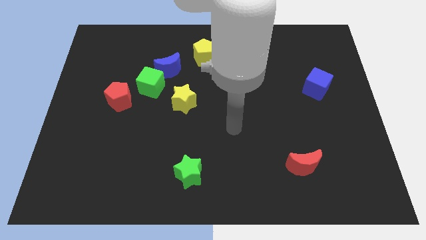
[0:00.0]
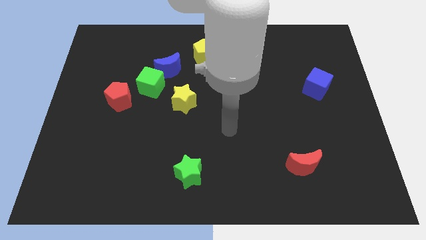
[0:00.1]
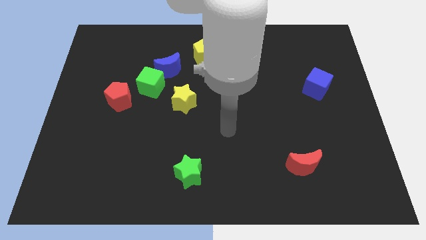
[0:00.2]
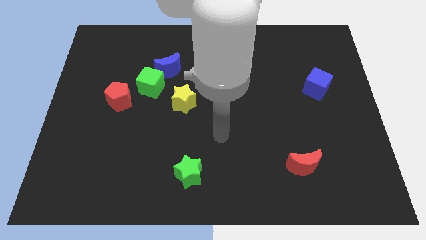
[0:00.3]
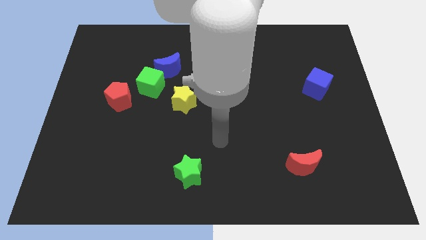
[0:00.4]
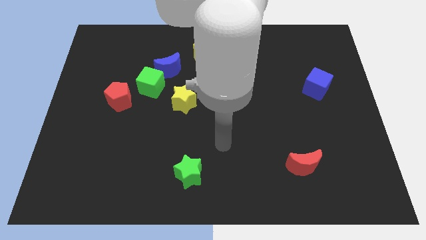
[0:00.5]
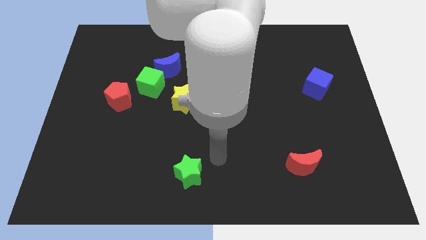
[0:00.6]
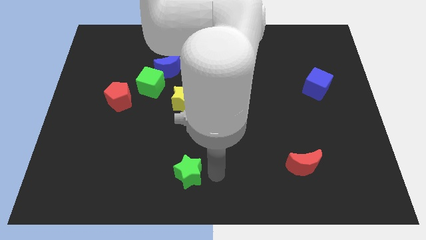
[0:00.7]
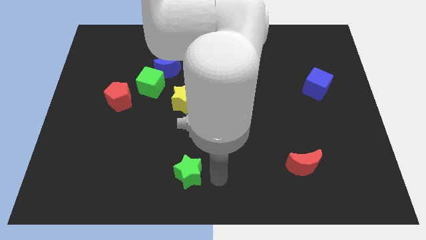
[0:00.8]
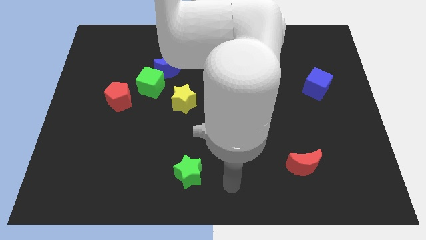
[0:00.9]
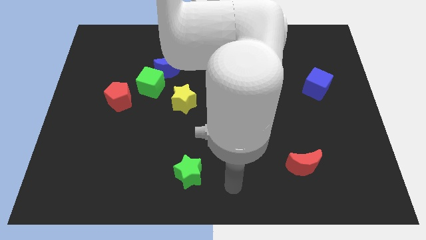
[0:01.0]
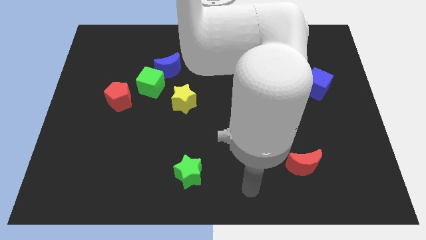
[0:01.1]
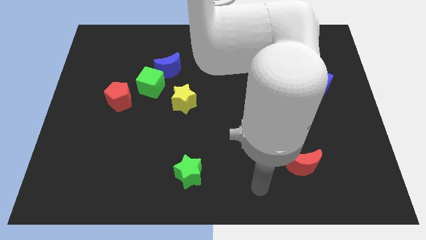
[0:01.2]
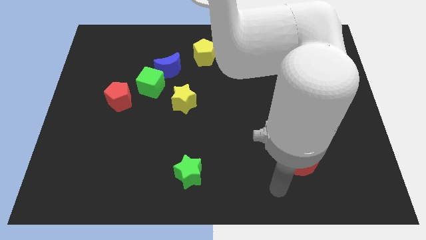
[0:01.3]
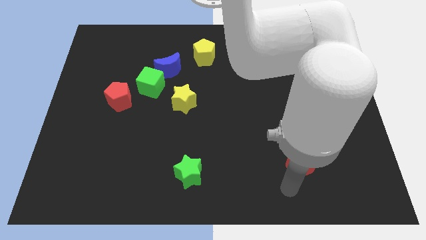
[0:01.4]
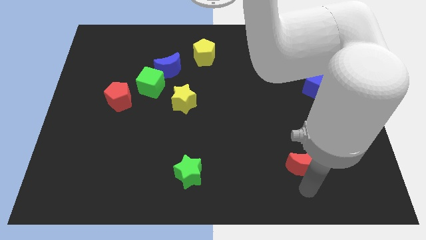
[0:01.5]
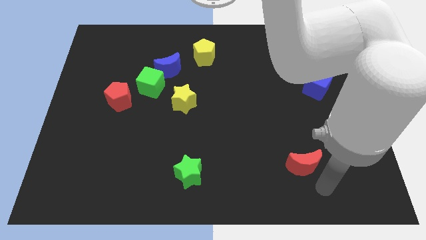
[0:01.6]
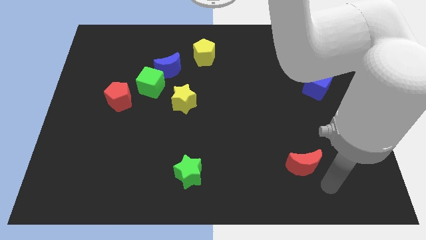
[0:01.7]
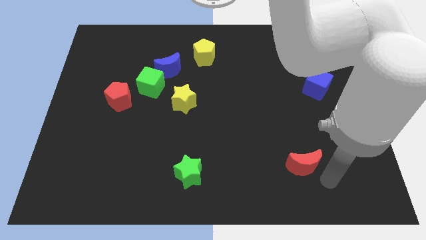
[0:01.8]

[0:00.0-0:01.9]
move your hand towards the red moon

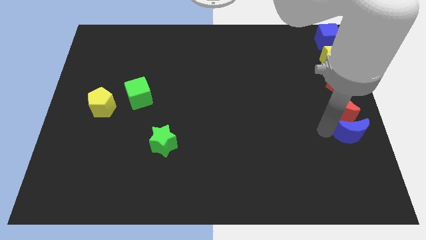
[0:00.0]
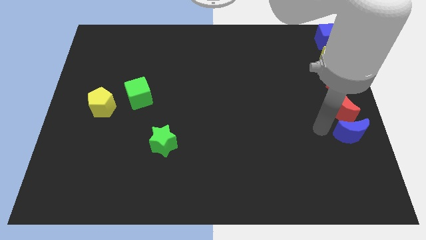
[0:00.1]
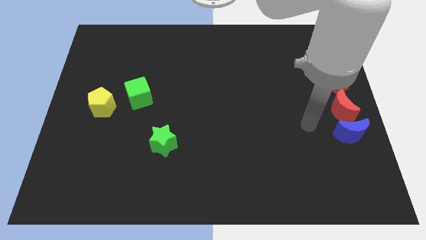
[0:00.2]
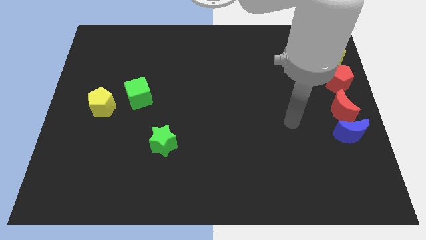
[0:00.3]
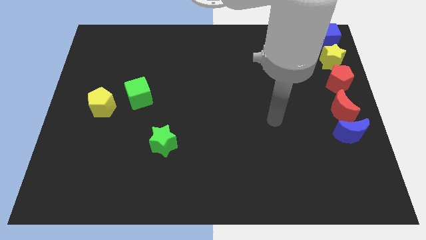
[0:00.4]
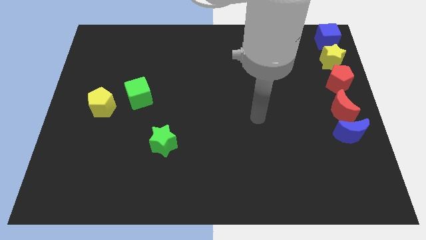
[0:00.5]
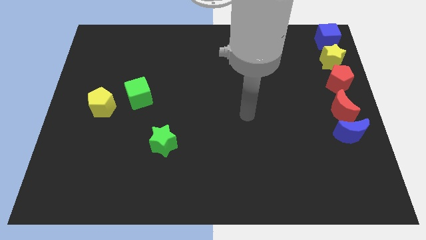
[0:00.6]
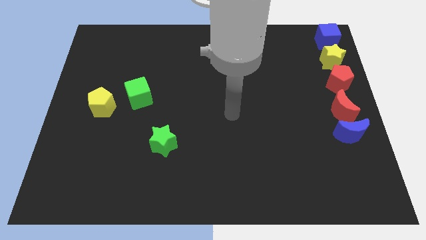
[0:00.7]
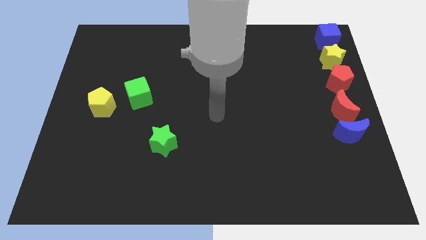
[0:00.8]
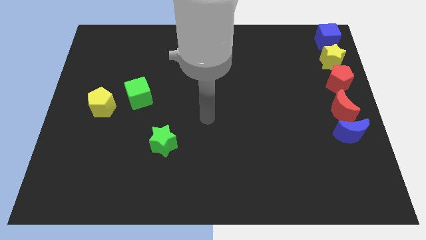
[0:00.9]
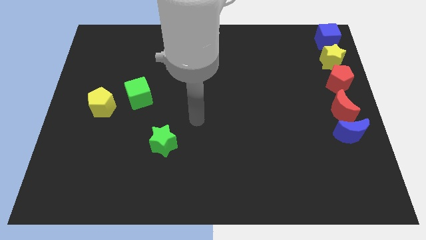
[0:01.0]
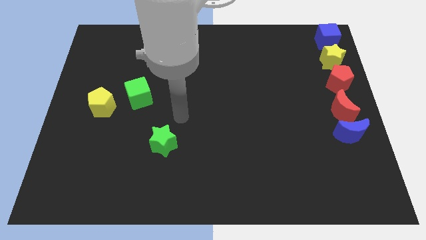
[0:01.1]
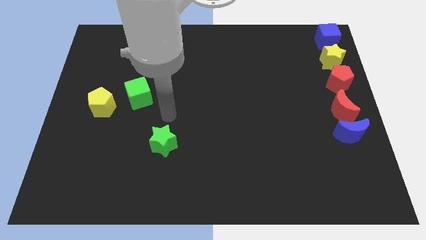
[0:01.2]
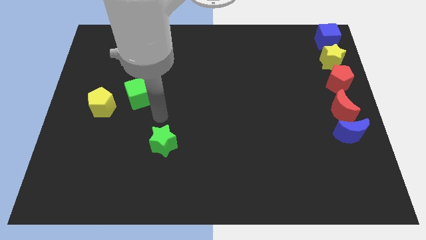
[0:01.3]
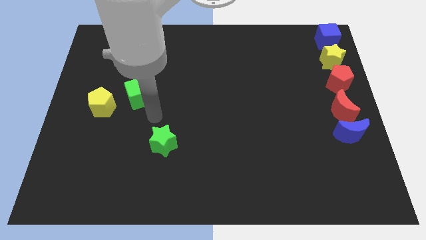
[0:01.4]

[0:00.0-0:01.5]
move your arm to the top of green star

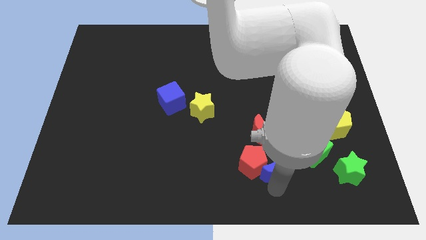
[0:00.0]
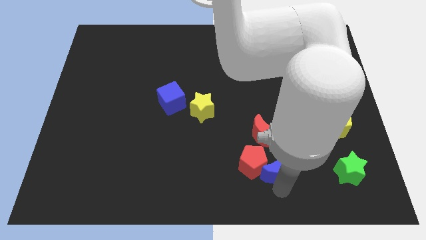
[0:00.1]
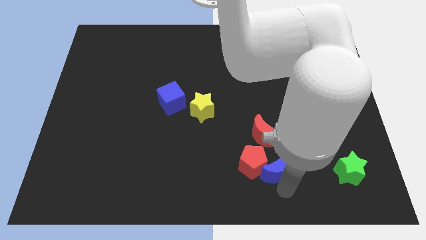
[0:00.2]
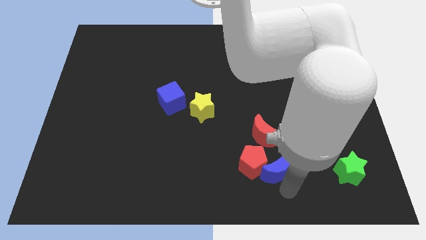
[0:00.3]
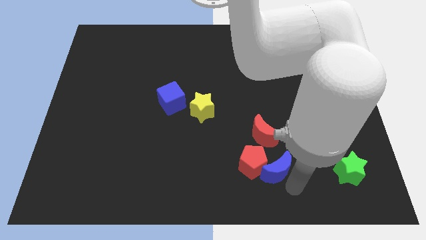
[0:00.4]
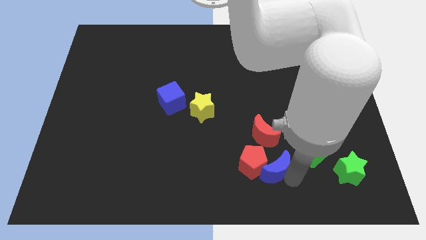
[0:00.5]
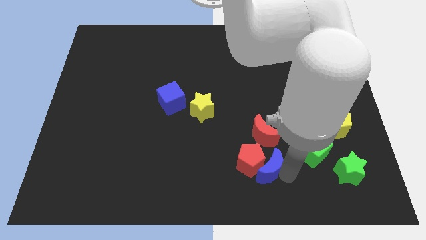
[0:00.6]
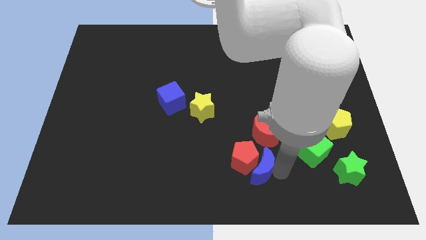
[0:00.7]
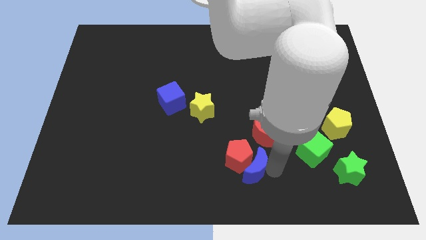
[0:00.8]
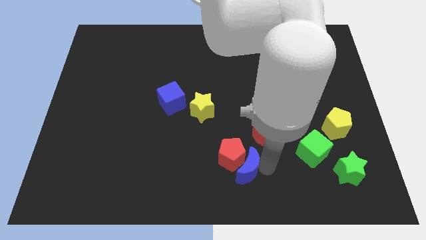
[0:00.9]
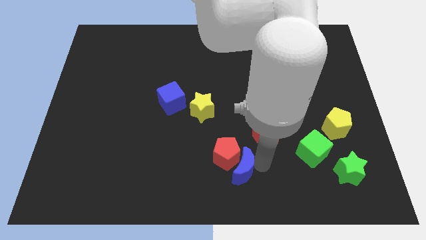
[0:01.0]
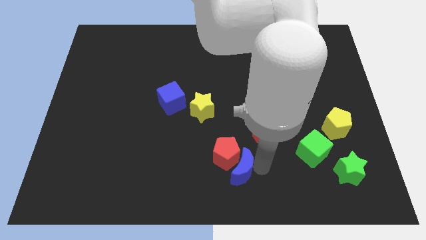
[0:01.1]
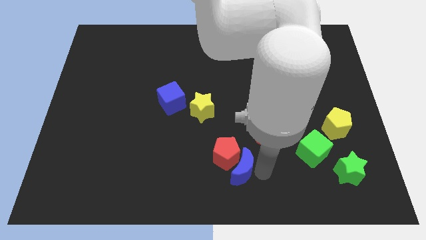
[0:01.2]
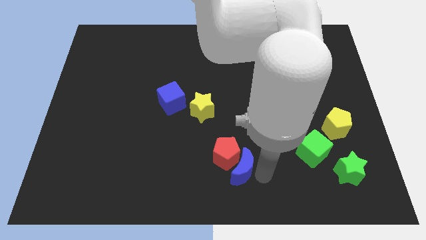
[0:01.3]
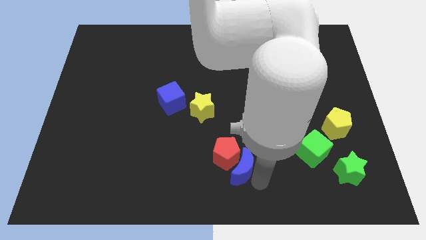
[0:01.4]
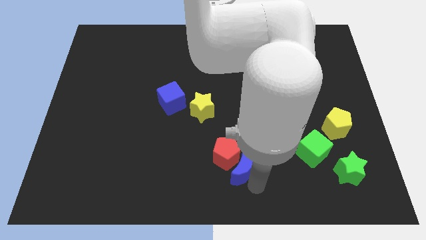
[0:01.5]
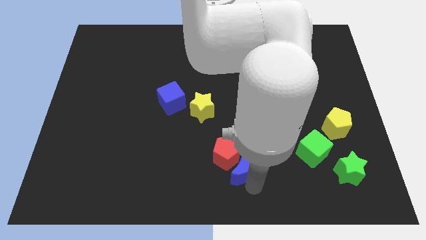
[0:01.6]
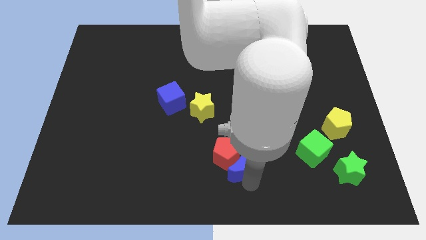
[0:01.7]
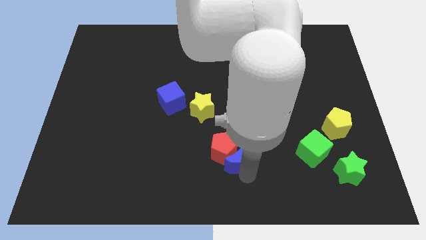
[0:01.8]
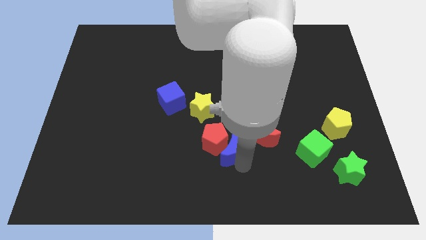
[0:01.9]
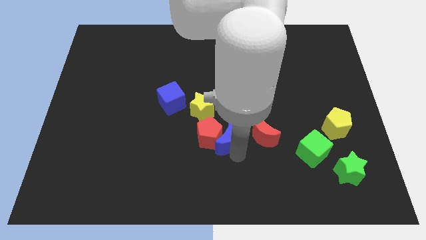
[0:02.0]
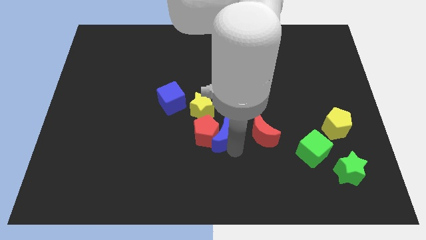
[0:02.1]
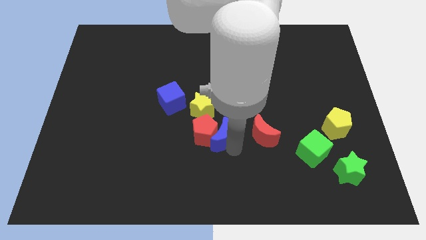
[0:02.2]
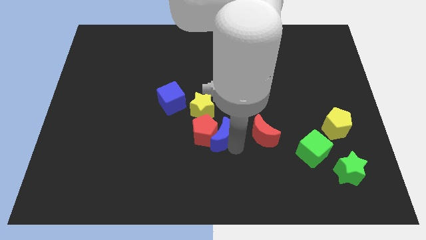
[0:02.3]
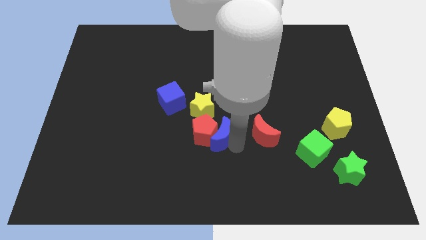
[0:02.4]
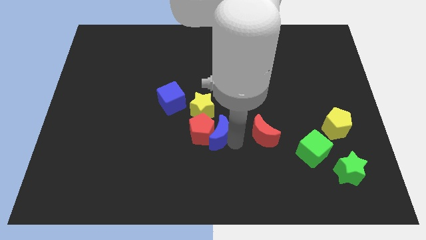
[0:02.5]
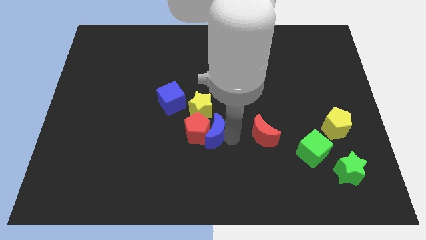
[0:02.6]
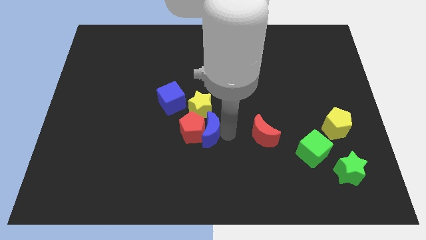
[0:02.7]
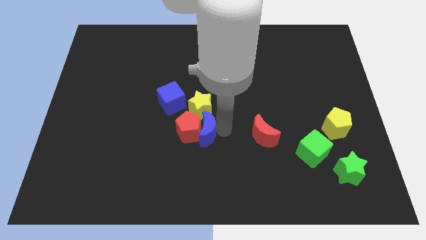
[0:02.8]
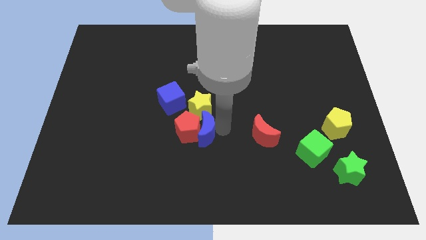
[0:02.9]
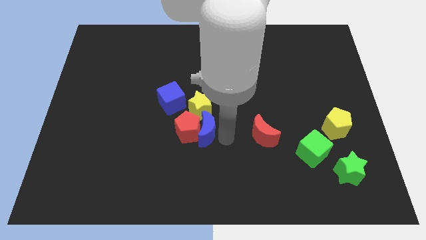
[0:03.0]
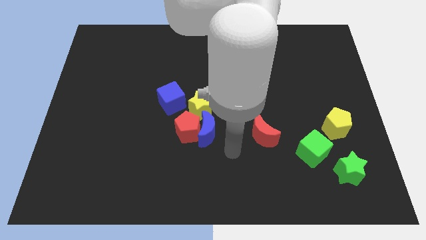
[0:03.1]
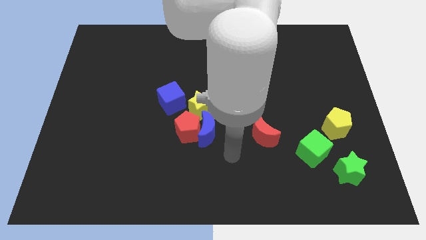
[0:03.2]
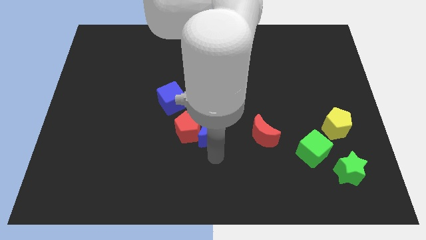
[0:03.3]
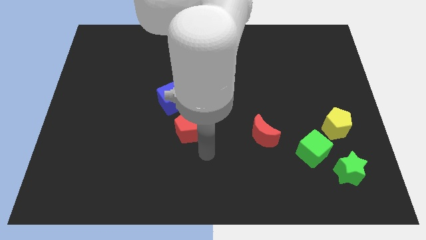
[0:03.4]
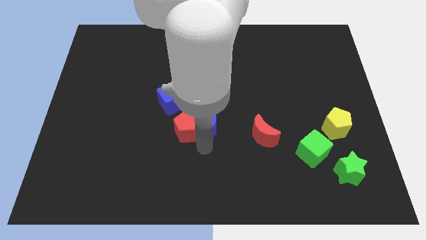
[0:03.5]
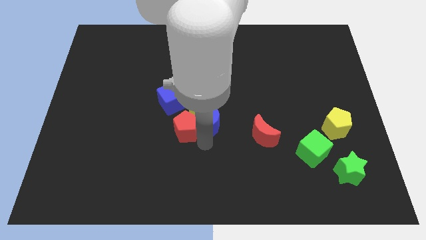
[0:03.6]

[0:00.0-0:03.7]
move the blue crescent and red pentagon towards the center of the board

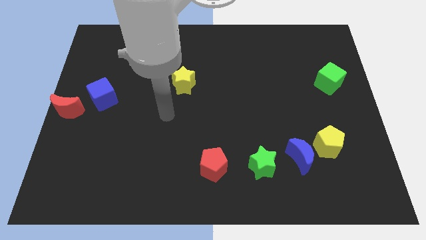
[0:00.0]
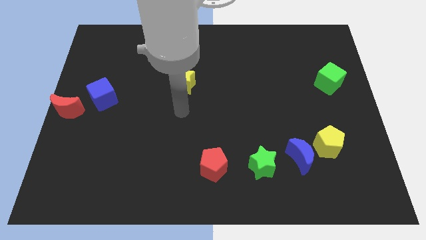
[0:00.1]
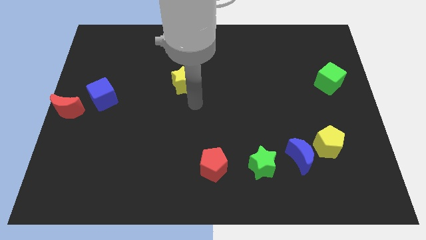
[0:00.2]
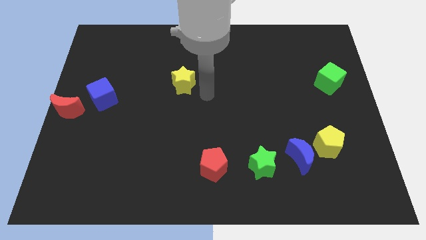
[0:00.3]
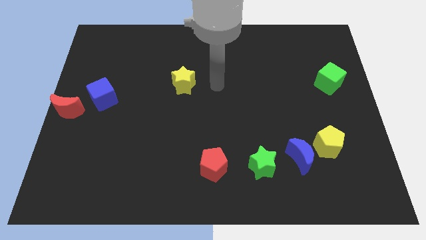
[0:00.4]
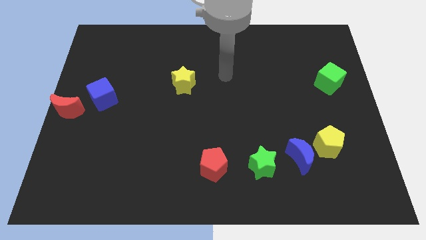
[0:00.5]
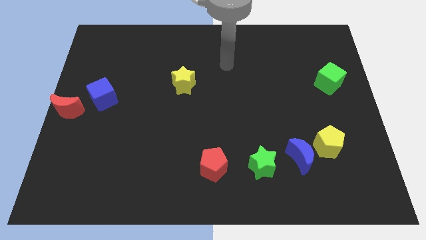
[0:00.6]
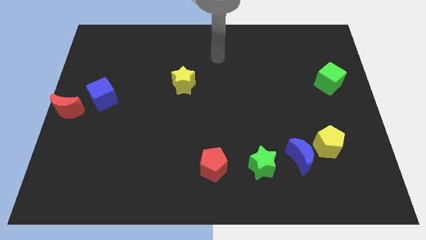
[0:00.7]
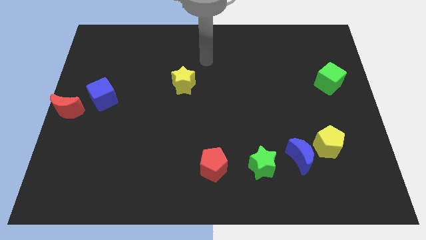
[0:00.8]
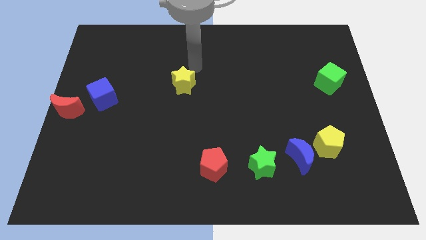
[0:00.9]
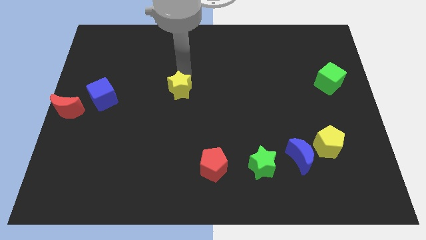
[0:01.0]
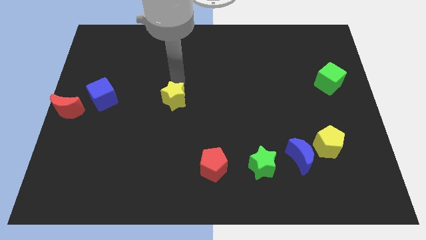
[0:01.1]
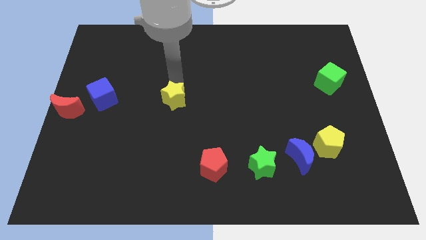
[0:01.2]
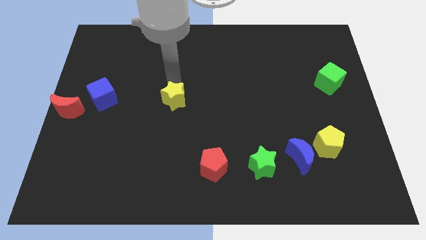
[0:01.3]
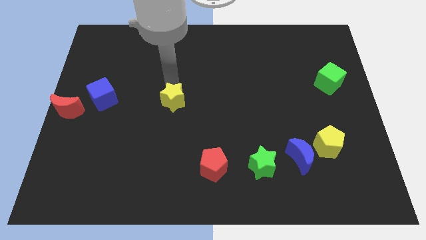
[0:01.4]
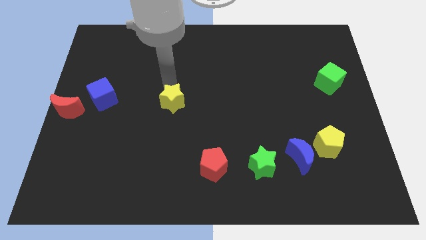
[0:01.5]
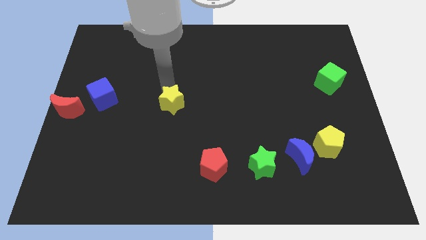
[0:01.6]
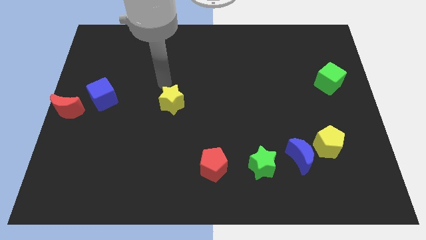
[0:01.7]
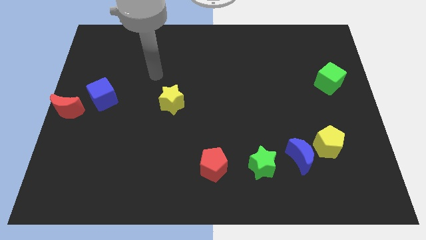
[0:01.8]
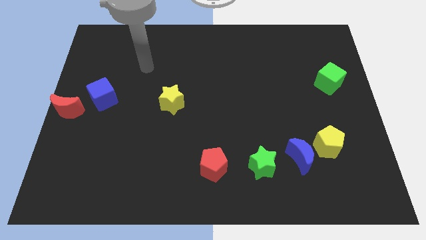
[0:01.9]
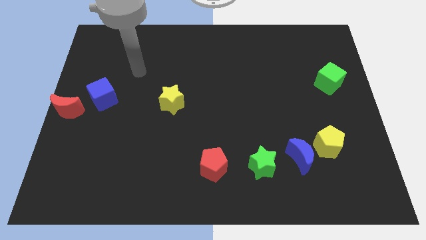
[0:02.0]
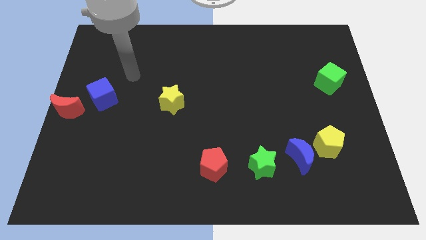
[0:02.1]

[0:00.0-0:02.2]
move yellow star parallel to blue cube
